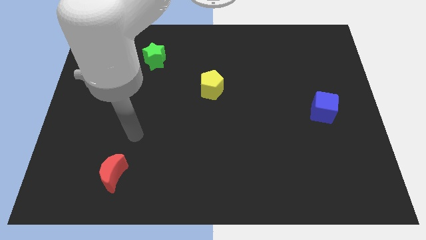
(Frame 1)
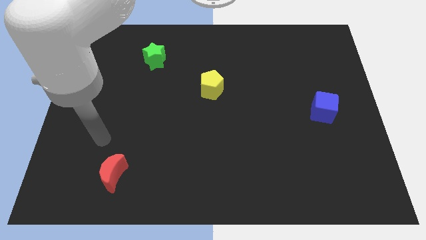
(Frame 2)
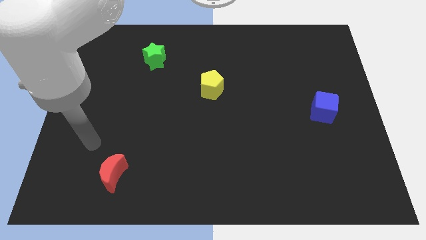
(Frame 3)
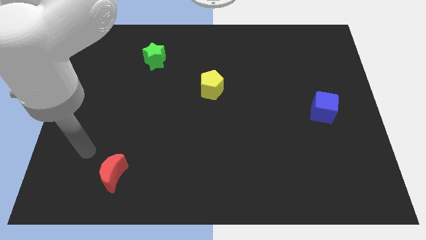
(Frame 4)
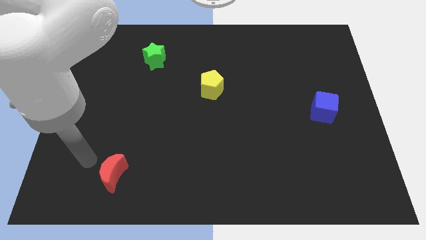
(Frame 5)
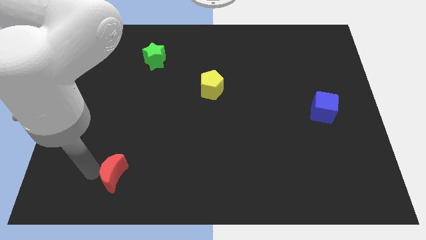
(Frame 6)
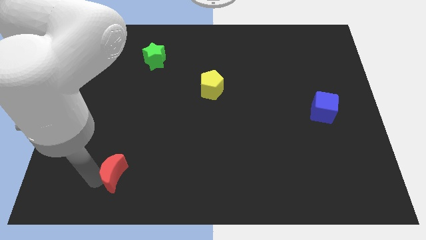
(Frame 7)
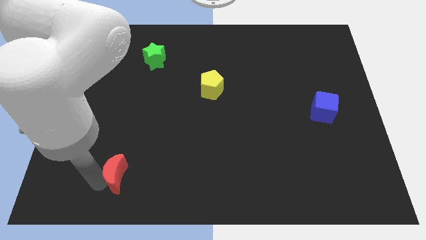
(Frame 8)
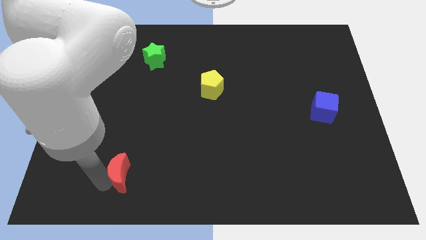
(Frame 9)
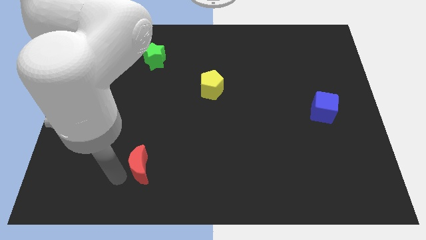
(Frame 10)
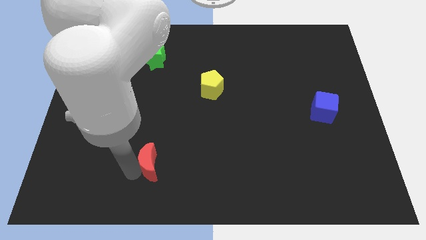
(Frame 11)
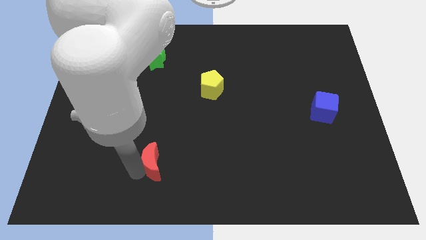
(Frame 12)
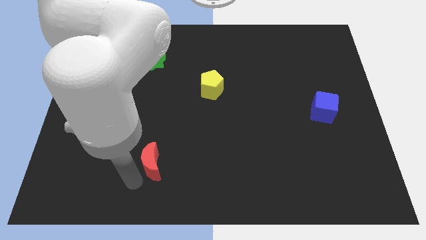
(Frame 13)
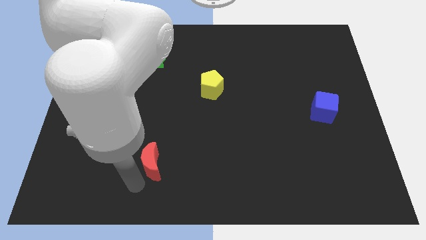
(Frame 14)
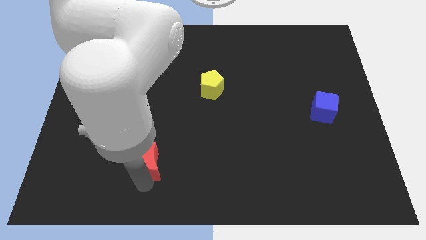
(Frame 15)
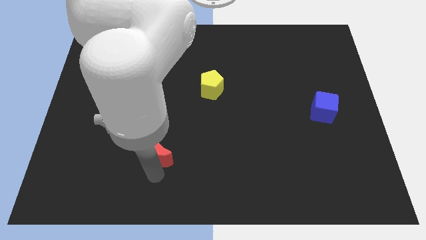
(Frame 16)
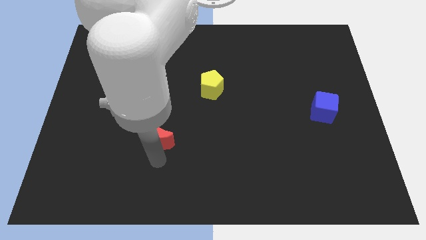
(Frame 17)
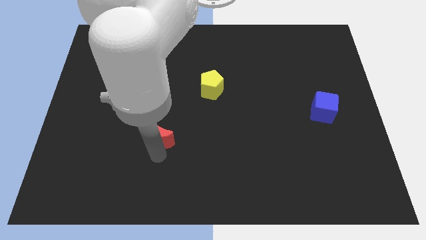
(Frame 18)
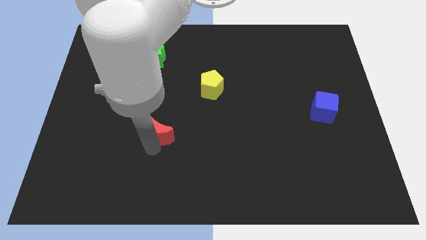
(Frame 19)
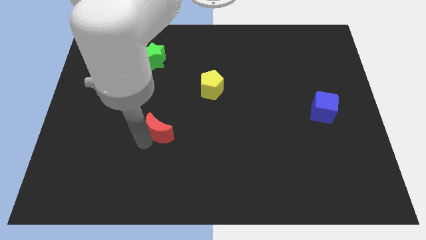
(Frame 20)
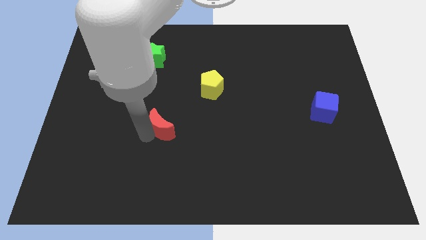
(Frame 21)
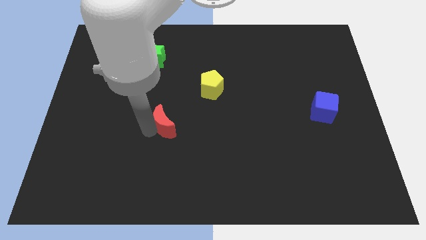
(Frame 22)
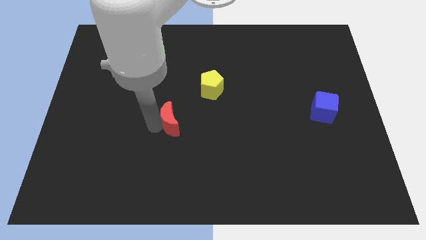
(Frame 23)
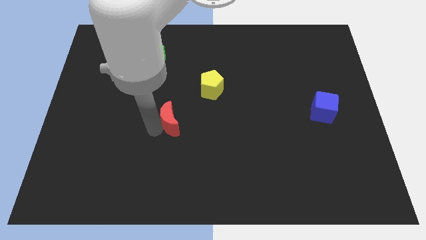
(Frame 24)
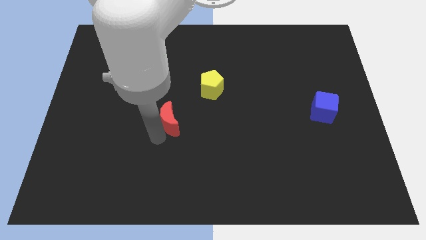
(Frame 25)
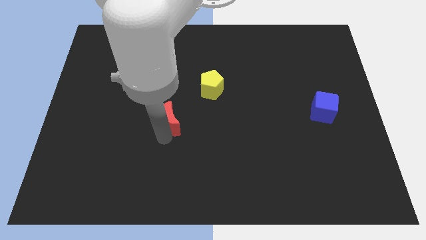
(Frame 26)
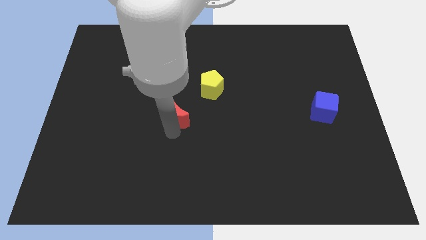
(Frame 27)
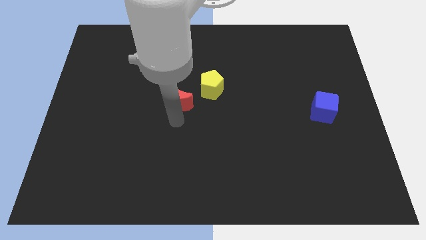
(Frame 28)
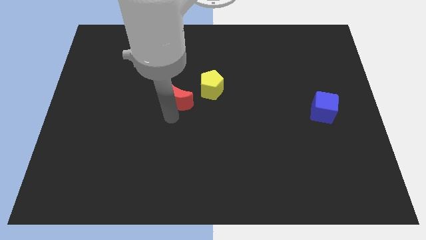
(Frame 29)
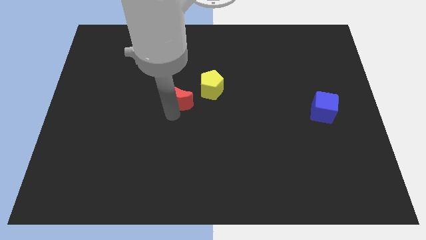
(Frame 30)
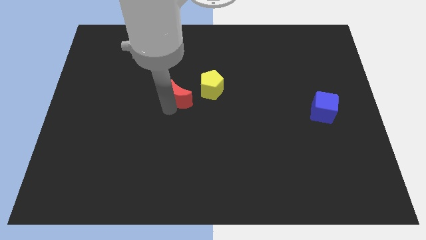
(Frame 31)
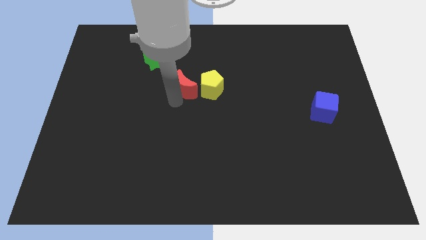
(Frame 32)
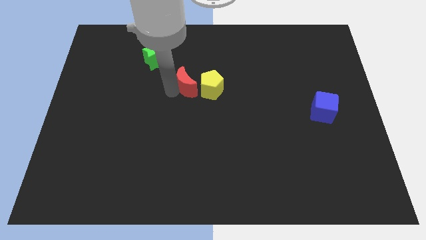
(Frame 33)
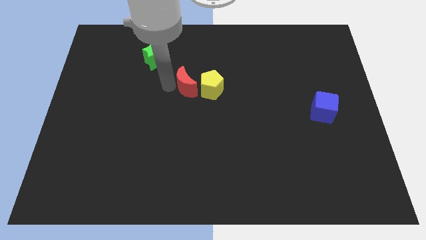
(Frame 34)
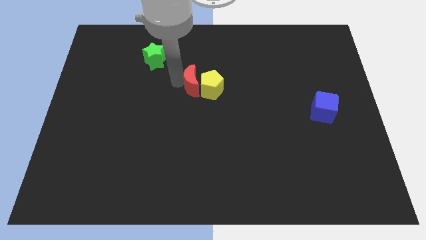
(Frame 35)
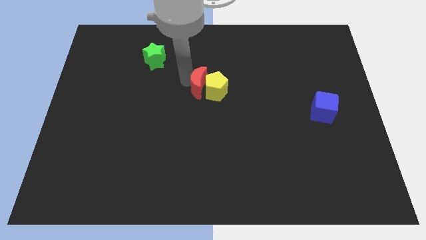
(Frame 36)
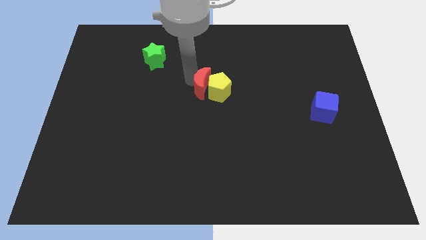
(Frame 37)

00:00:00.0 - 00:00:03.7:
slide the moon towards the yellow block

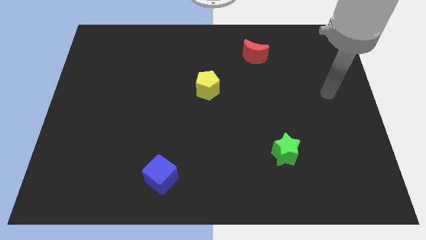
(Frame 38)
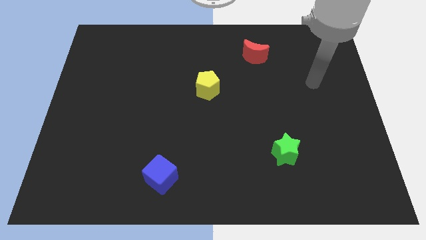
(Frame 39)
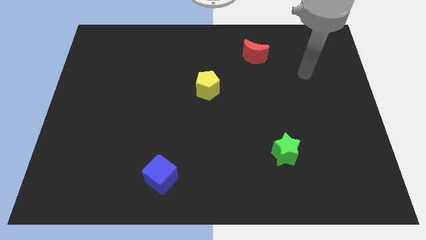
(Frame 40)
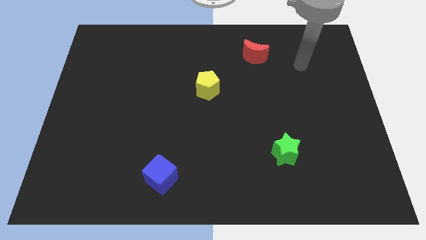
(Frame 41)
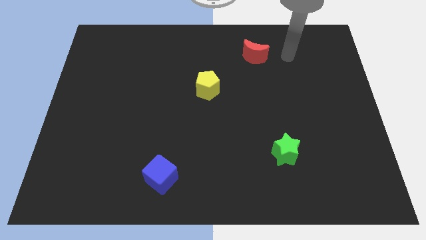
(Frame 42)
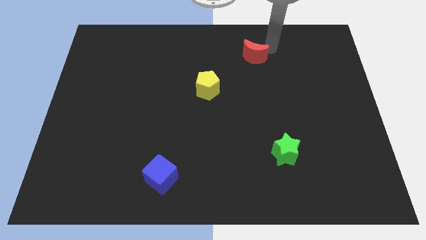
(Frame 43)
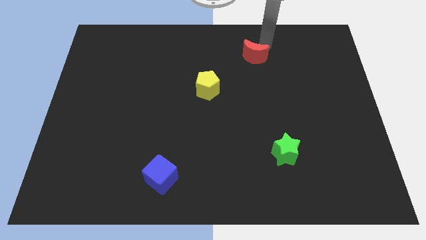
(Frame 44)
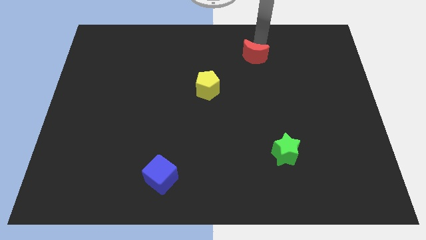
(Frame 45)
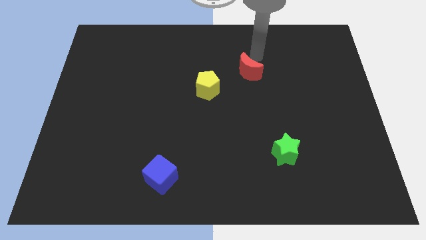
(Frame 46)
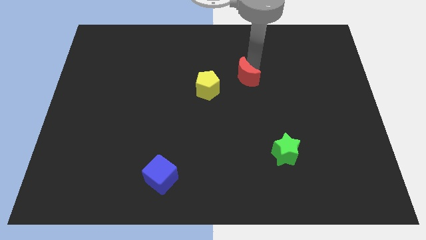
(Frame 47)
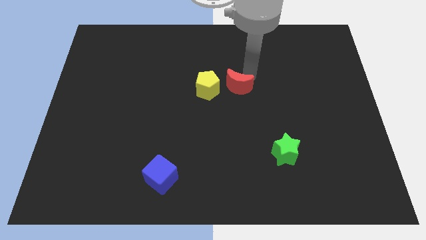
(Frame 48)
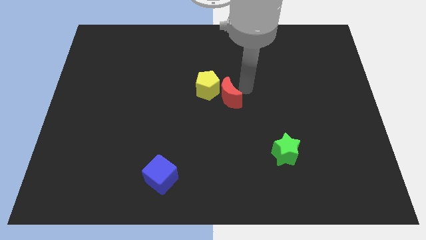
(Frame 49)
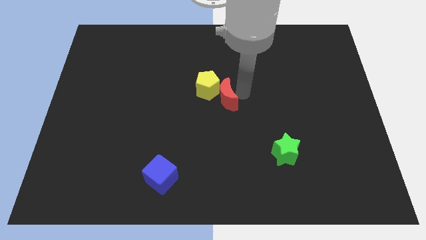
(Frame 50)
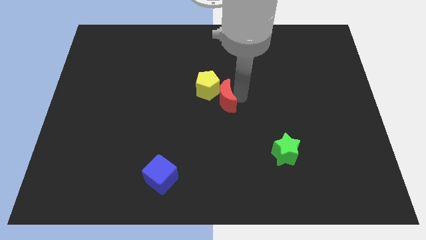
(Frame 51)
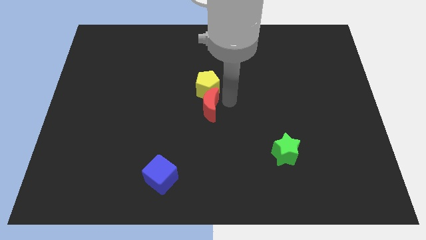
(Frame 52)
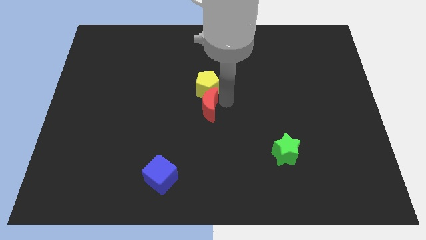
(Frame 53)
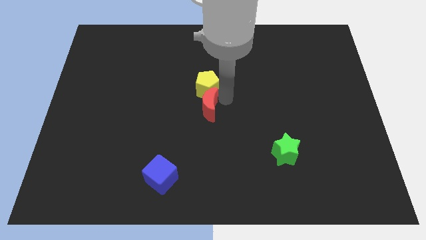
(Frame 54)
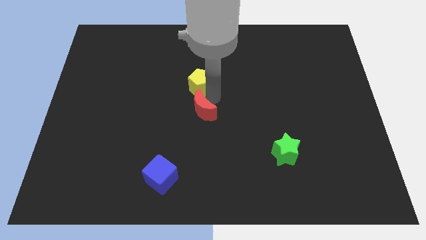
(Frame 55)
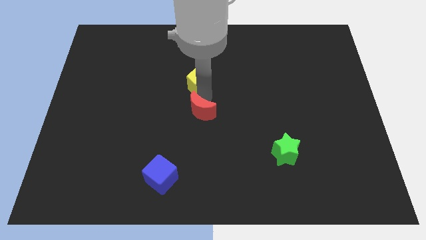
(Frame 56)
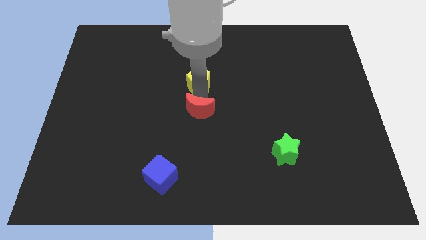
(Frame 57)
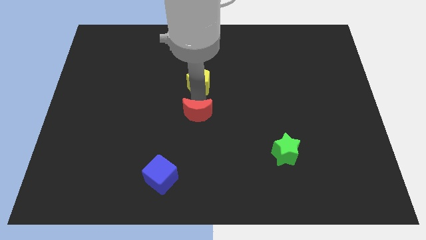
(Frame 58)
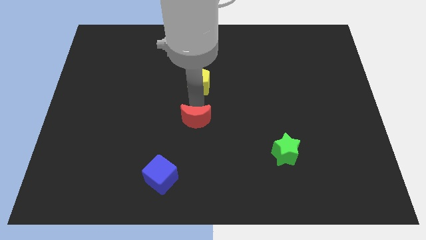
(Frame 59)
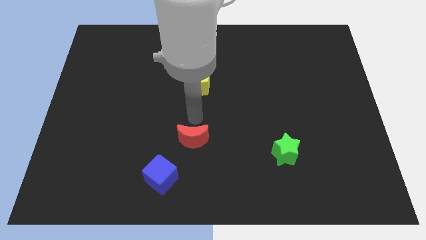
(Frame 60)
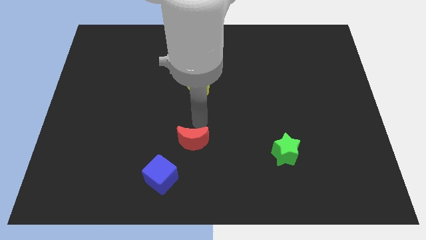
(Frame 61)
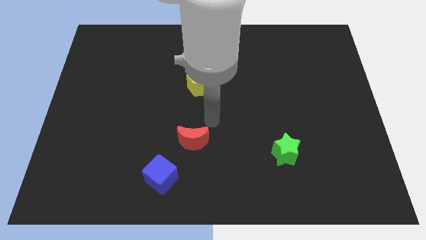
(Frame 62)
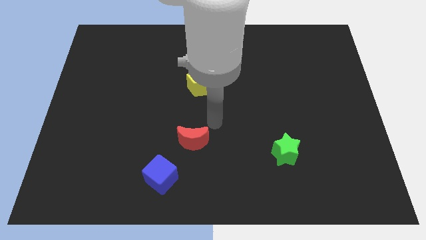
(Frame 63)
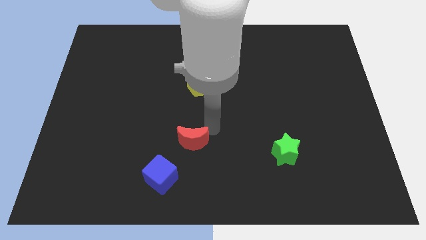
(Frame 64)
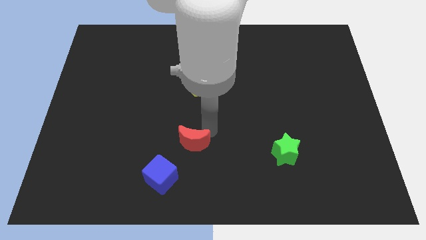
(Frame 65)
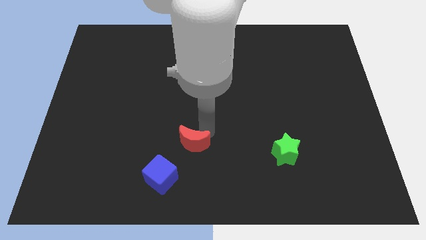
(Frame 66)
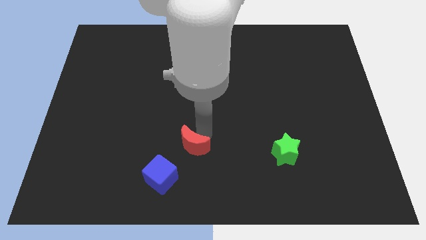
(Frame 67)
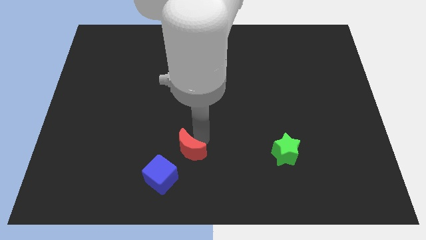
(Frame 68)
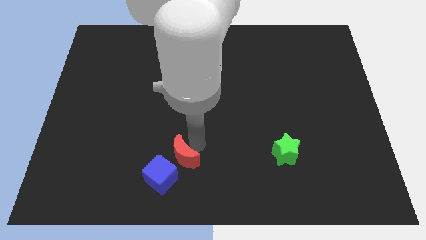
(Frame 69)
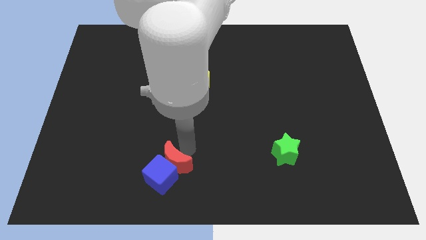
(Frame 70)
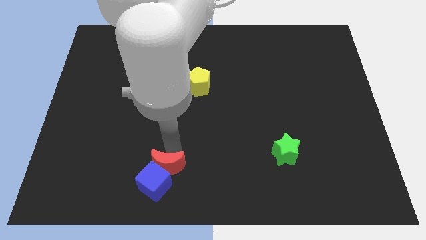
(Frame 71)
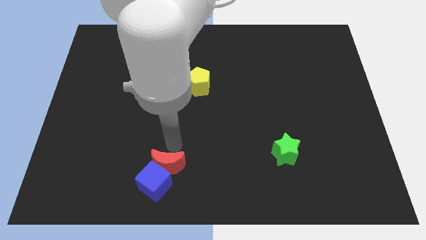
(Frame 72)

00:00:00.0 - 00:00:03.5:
push the moon to the blue block

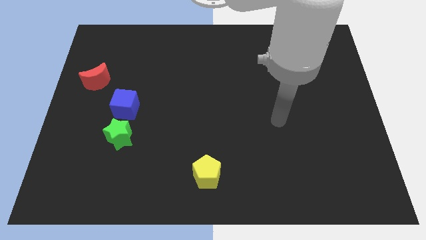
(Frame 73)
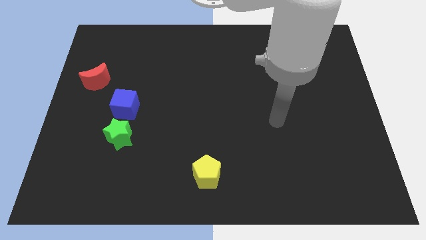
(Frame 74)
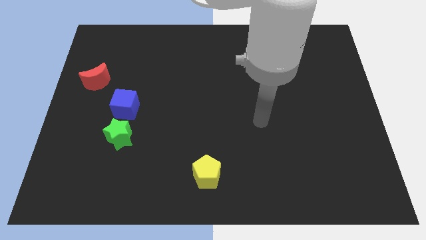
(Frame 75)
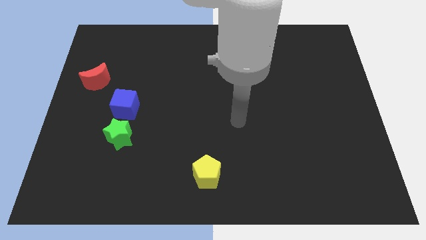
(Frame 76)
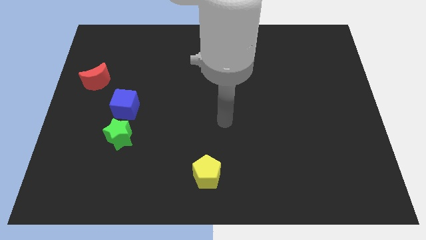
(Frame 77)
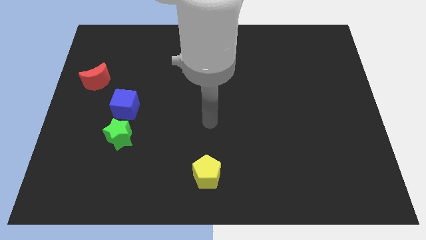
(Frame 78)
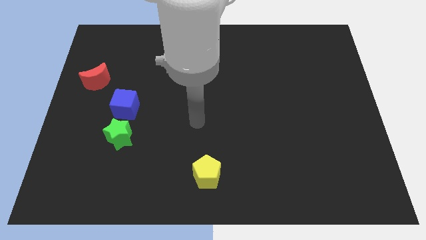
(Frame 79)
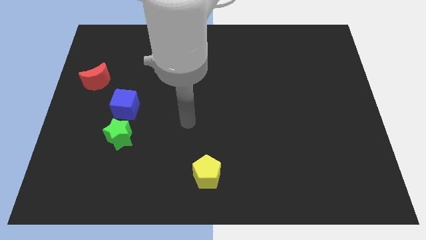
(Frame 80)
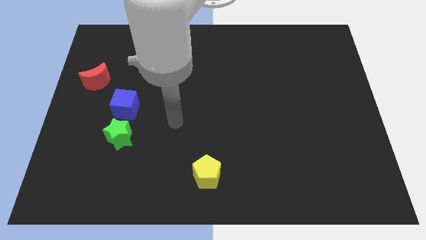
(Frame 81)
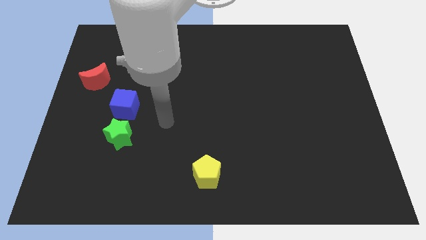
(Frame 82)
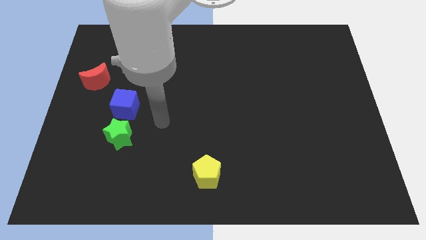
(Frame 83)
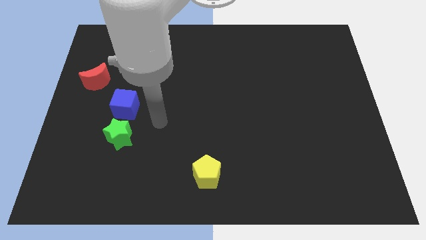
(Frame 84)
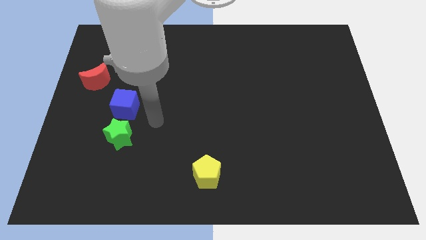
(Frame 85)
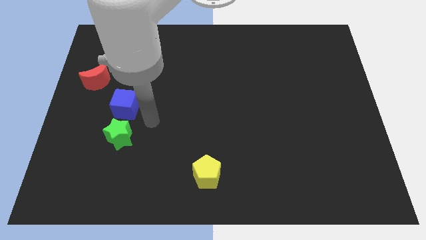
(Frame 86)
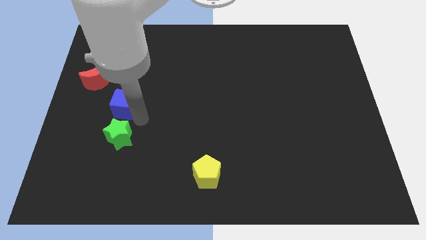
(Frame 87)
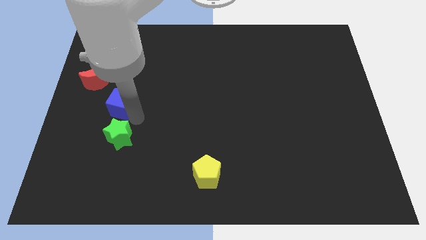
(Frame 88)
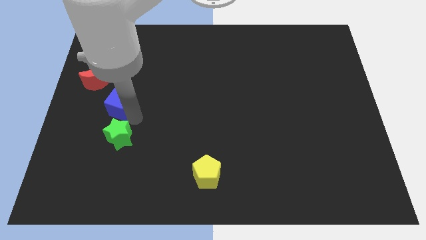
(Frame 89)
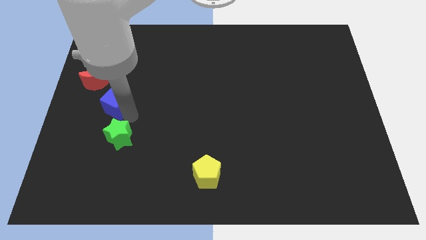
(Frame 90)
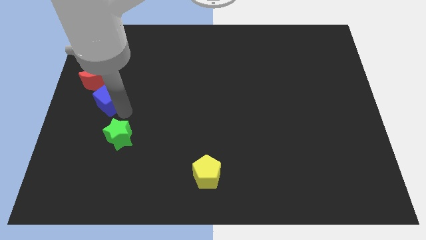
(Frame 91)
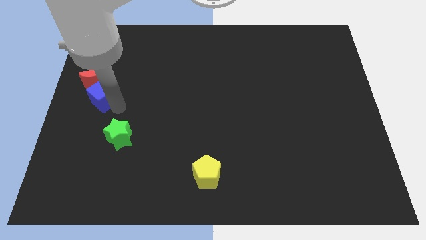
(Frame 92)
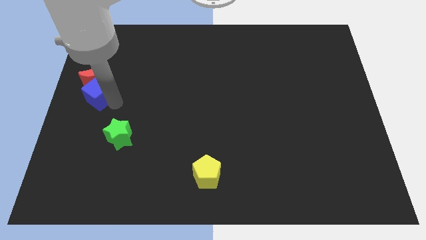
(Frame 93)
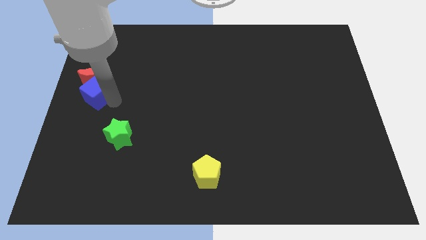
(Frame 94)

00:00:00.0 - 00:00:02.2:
put the blue cube close to the moon
